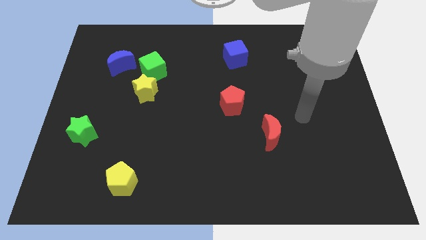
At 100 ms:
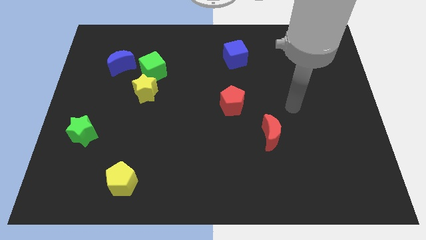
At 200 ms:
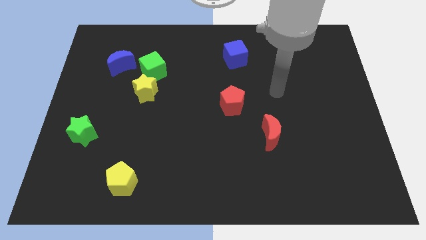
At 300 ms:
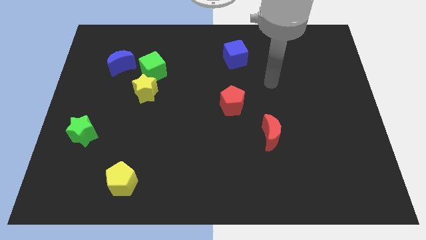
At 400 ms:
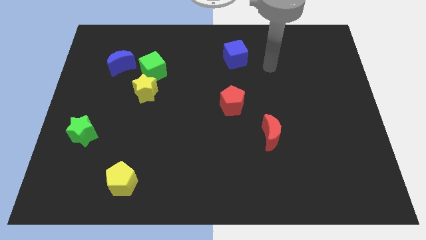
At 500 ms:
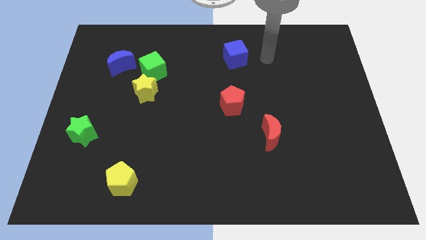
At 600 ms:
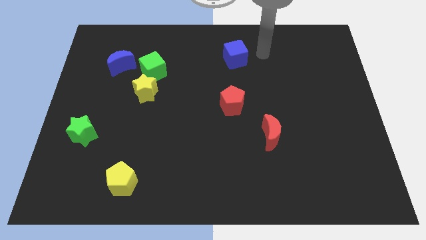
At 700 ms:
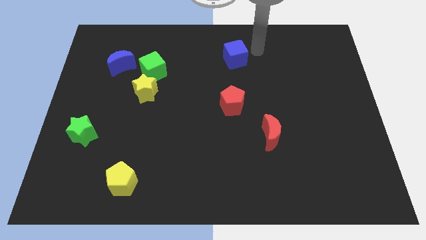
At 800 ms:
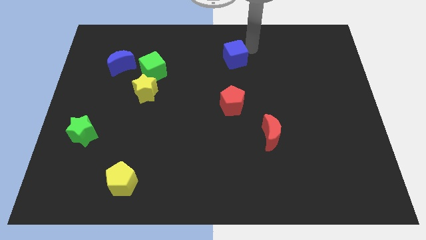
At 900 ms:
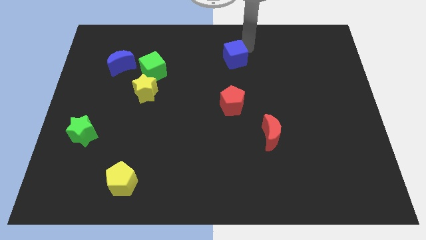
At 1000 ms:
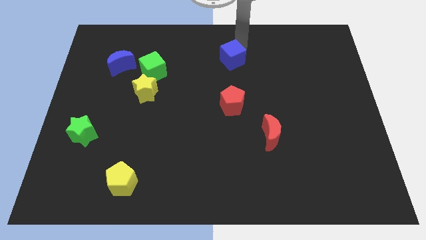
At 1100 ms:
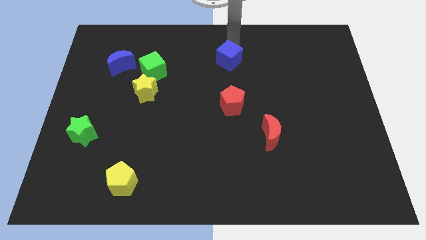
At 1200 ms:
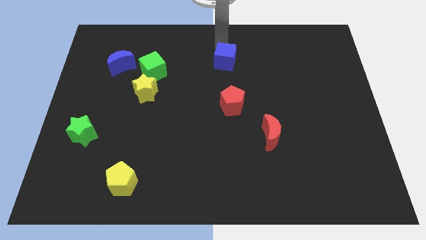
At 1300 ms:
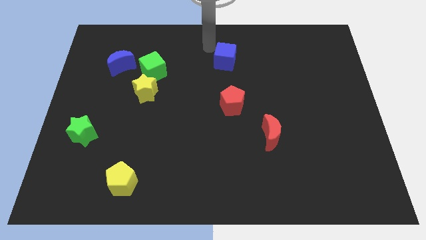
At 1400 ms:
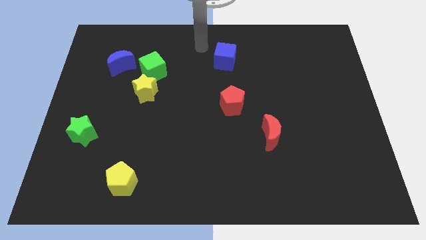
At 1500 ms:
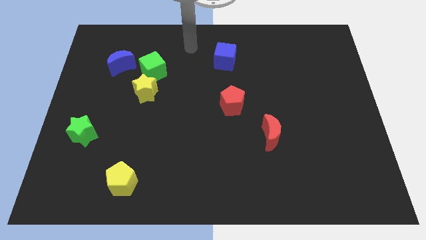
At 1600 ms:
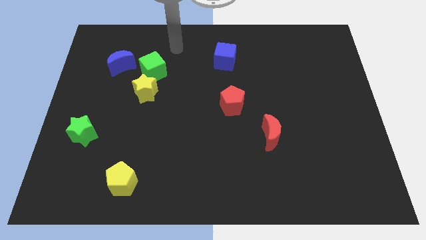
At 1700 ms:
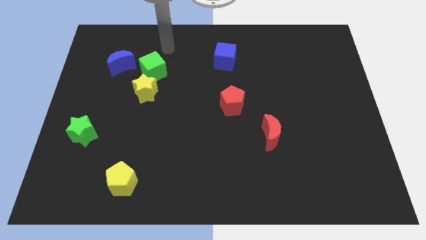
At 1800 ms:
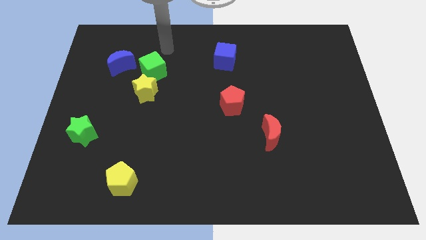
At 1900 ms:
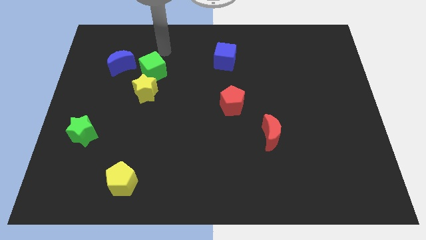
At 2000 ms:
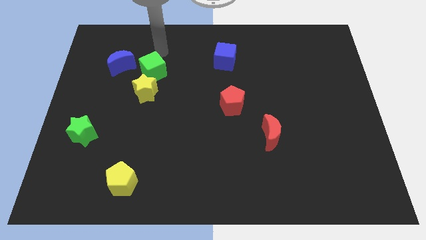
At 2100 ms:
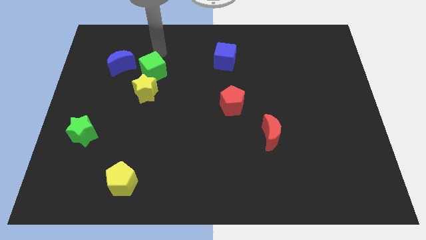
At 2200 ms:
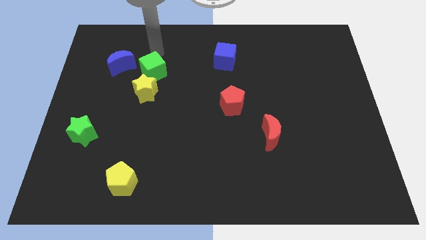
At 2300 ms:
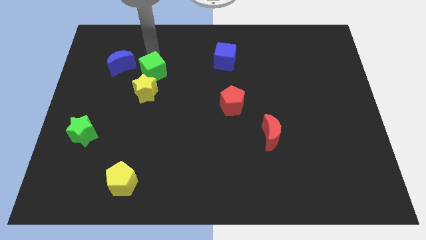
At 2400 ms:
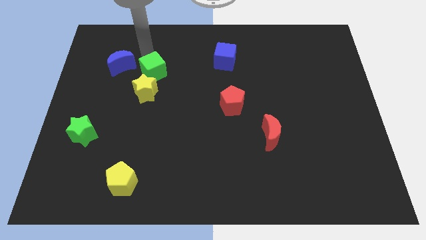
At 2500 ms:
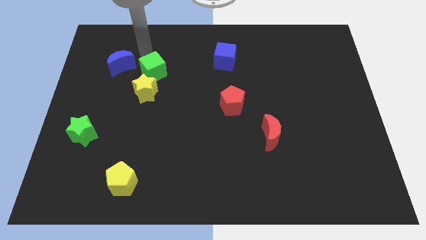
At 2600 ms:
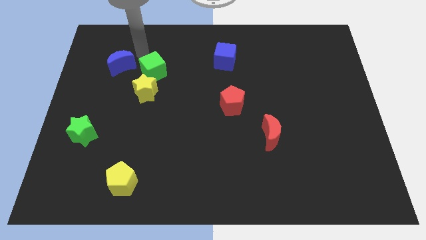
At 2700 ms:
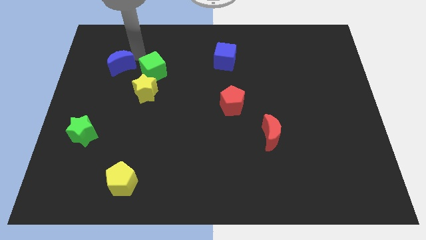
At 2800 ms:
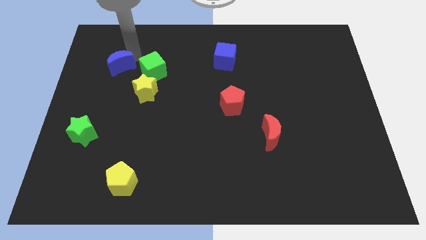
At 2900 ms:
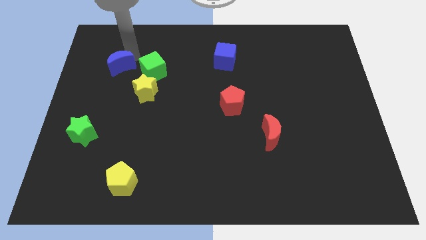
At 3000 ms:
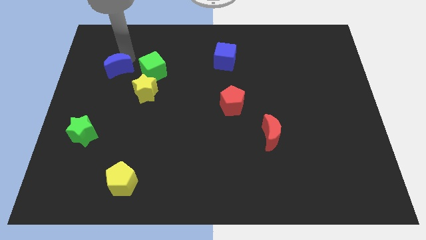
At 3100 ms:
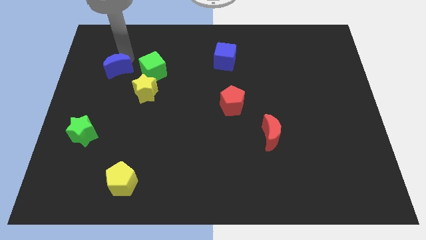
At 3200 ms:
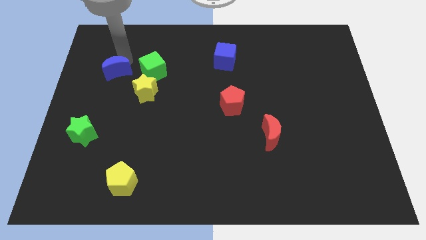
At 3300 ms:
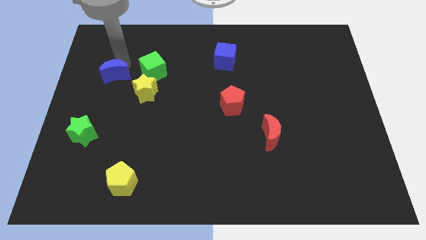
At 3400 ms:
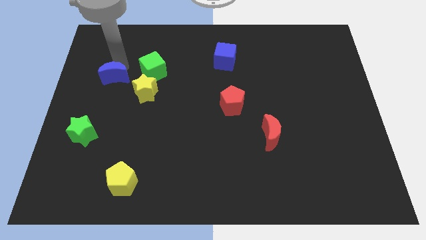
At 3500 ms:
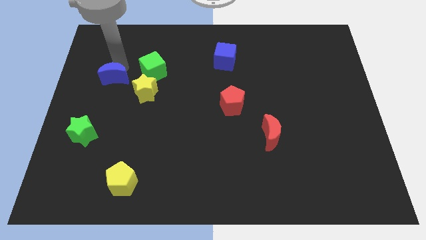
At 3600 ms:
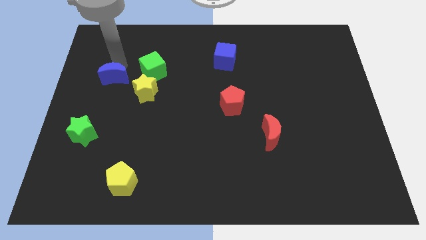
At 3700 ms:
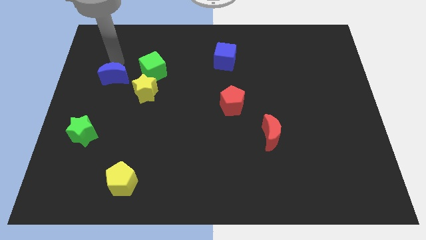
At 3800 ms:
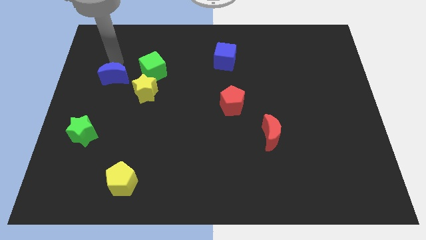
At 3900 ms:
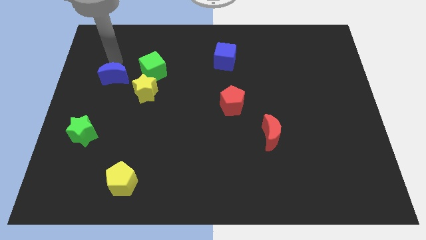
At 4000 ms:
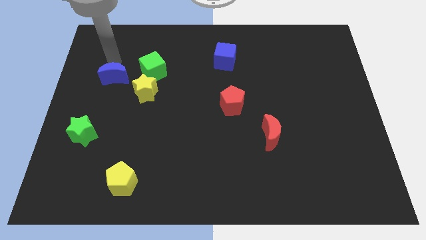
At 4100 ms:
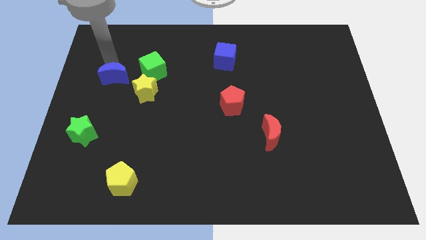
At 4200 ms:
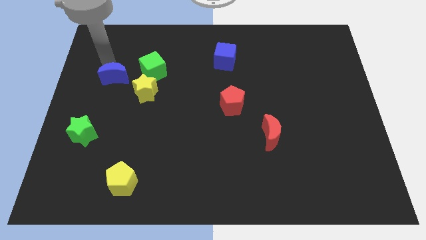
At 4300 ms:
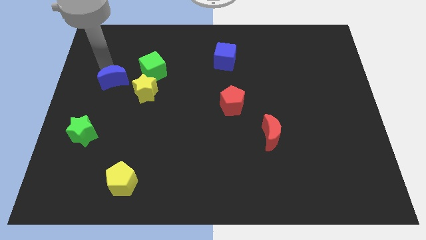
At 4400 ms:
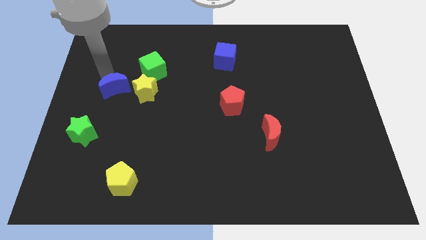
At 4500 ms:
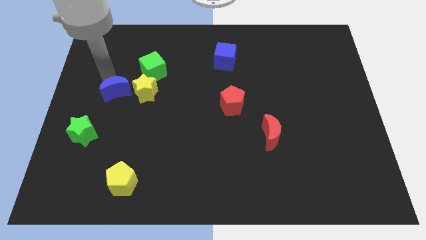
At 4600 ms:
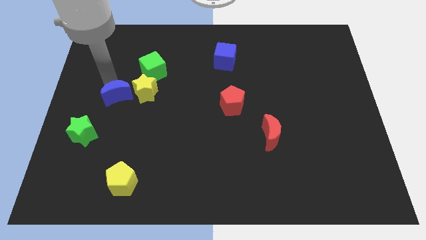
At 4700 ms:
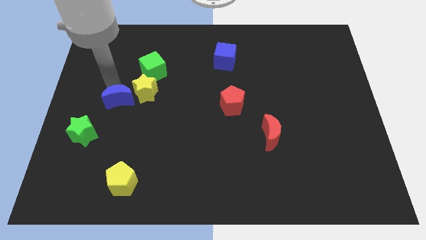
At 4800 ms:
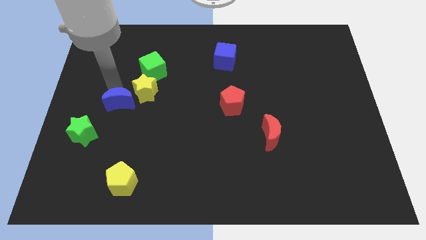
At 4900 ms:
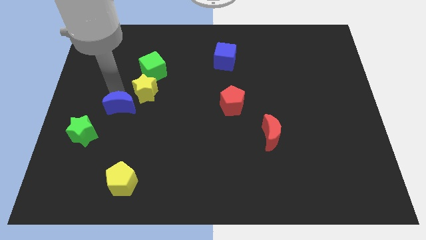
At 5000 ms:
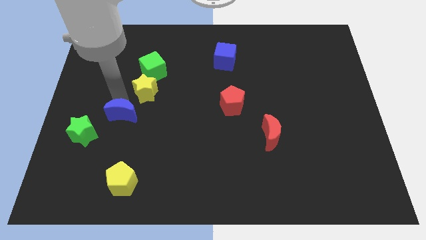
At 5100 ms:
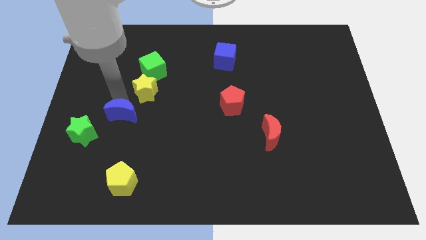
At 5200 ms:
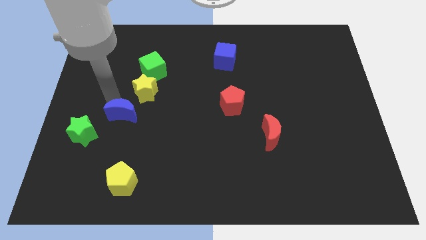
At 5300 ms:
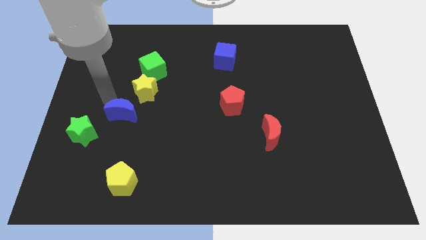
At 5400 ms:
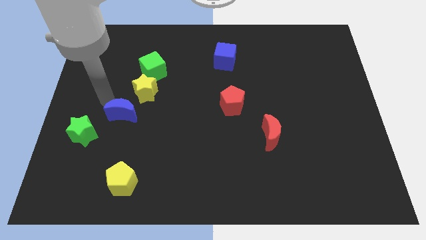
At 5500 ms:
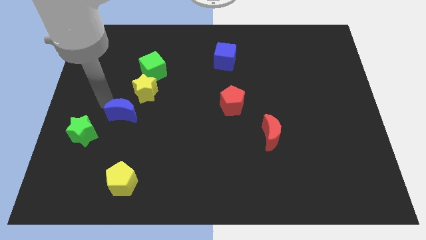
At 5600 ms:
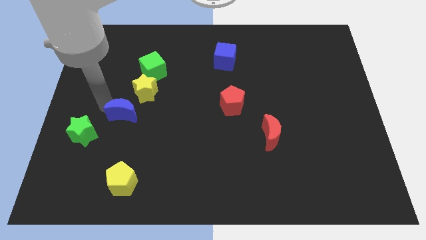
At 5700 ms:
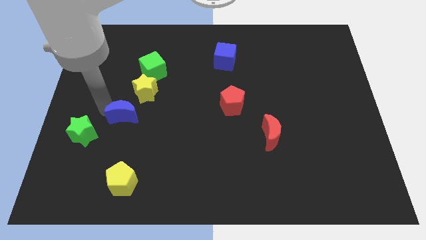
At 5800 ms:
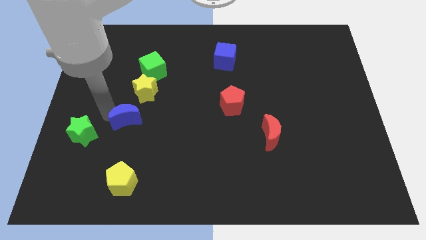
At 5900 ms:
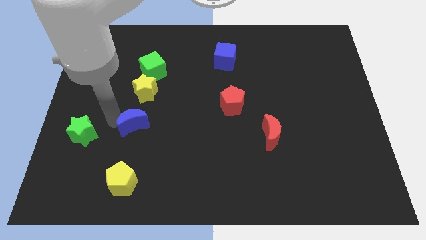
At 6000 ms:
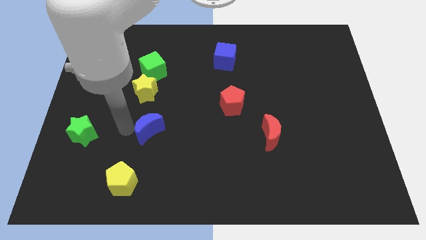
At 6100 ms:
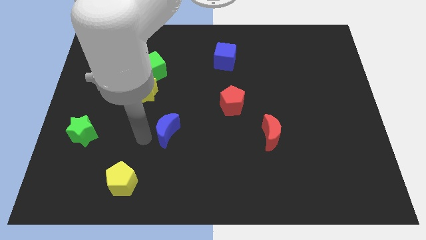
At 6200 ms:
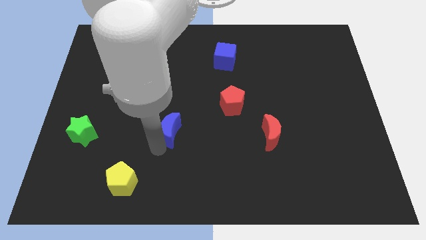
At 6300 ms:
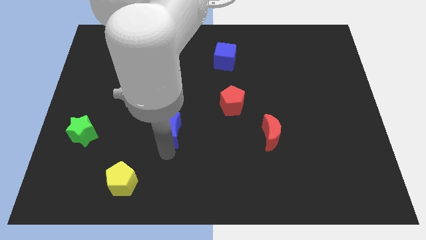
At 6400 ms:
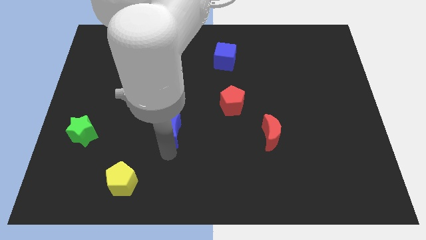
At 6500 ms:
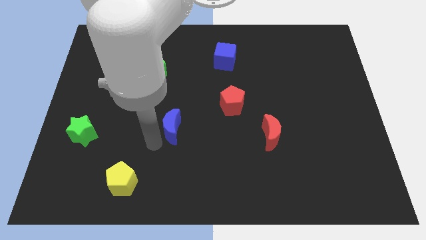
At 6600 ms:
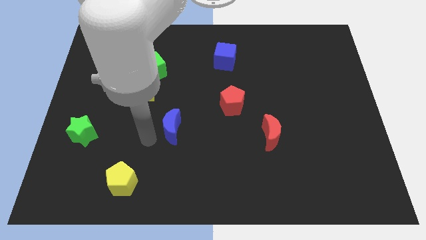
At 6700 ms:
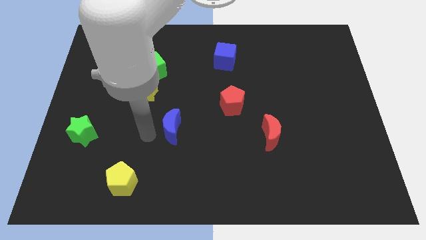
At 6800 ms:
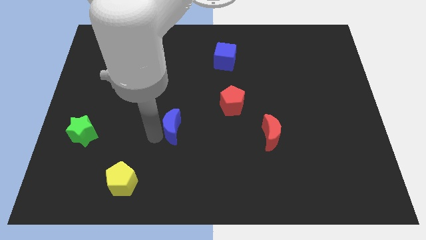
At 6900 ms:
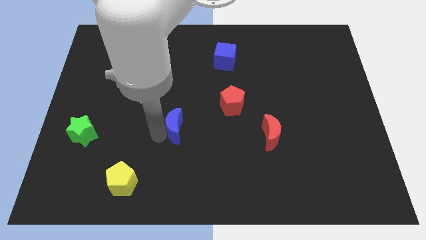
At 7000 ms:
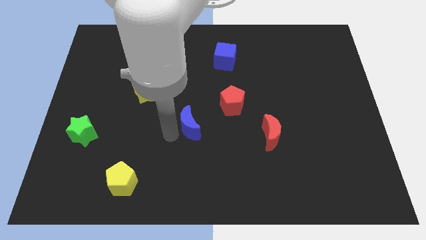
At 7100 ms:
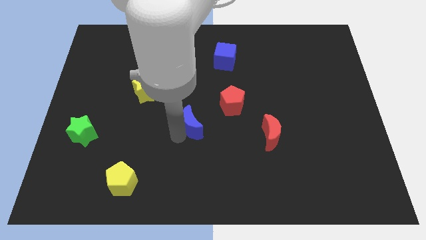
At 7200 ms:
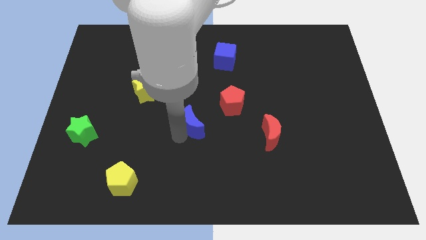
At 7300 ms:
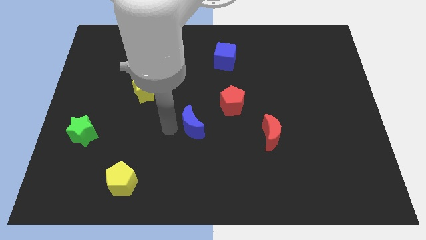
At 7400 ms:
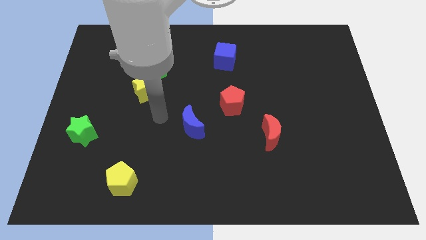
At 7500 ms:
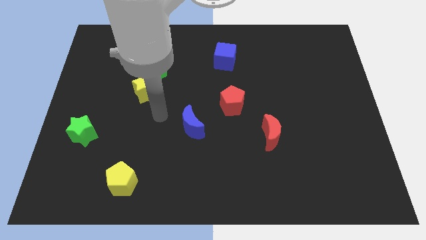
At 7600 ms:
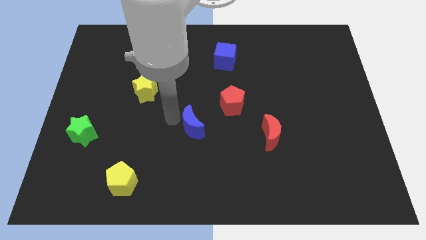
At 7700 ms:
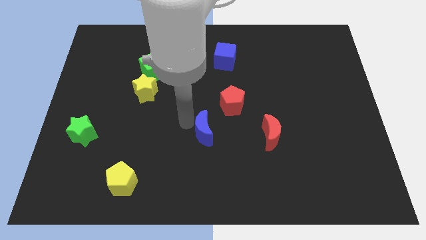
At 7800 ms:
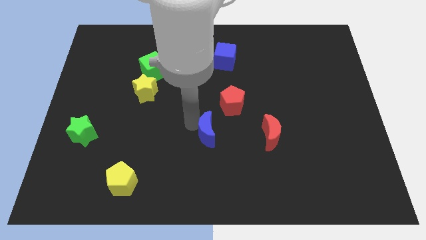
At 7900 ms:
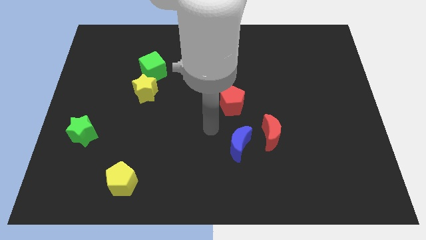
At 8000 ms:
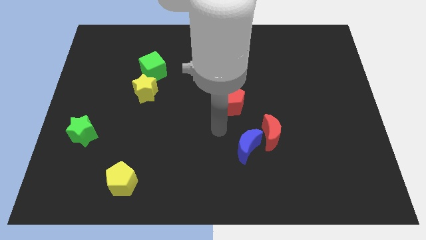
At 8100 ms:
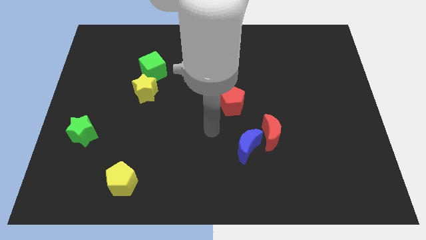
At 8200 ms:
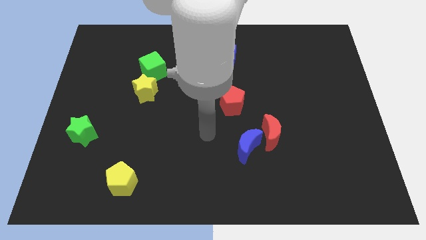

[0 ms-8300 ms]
put the blue moon to the red moon

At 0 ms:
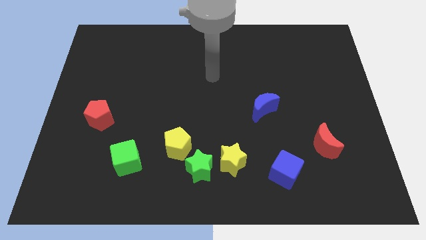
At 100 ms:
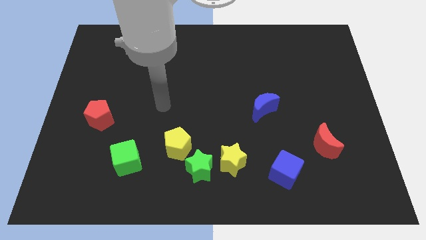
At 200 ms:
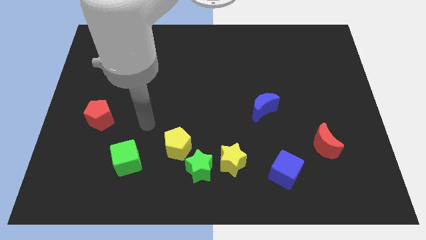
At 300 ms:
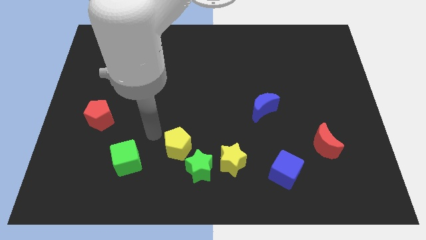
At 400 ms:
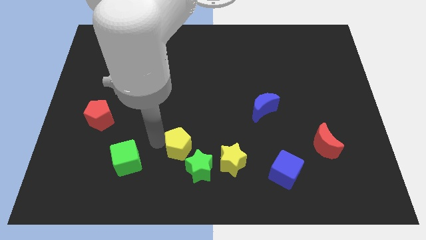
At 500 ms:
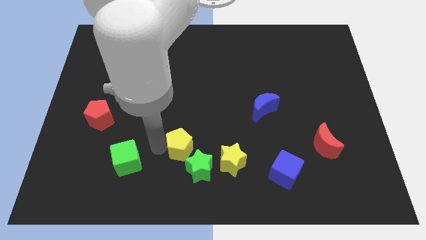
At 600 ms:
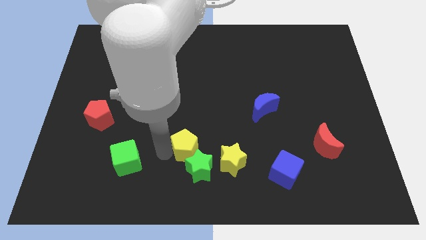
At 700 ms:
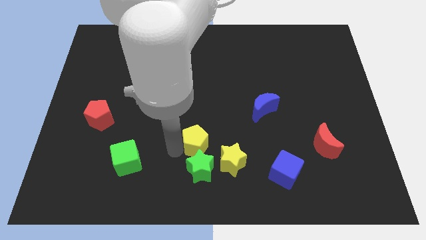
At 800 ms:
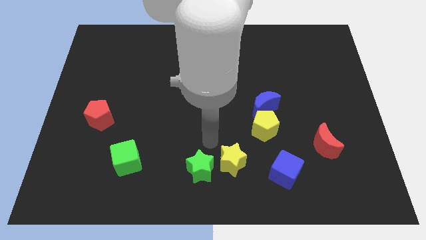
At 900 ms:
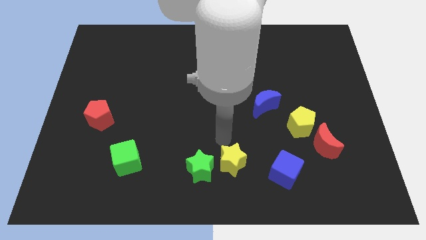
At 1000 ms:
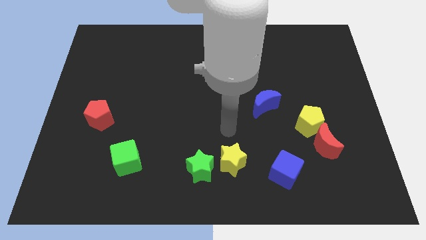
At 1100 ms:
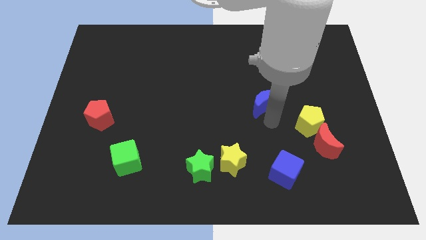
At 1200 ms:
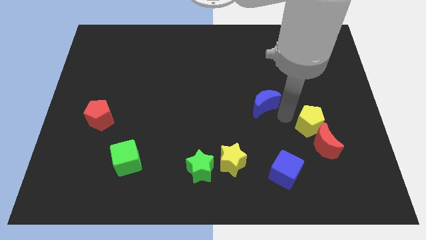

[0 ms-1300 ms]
push the yellow pentagon to the red moon
